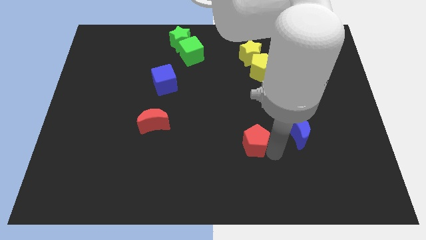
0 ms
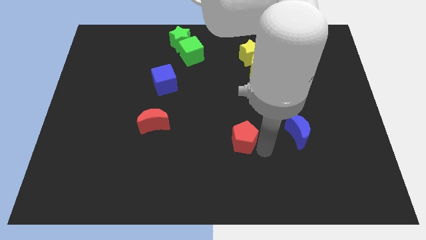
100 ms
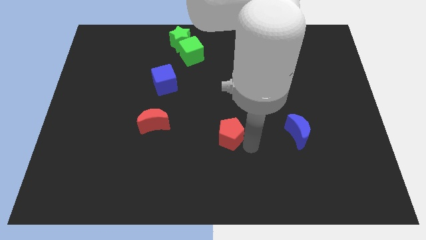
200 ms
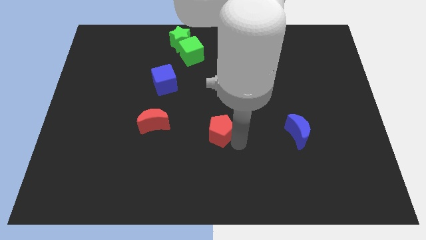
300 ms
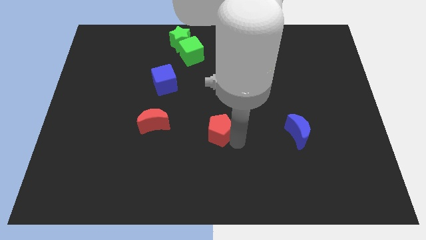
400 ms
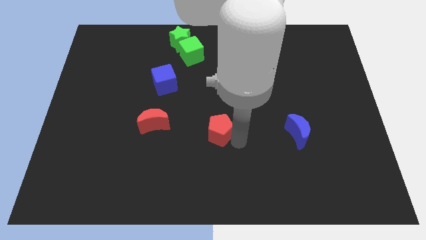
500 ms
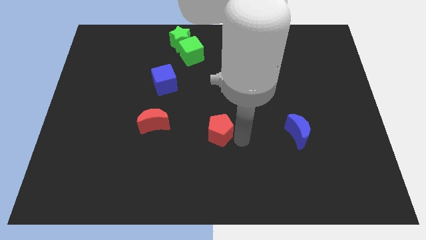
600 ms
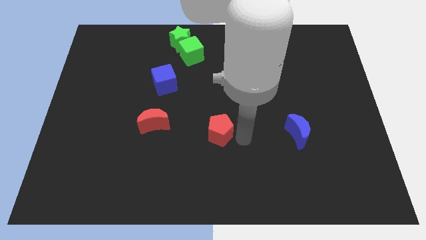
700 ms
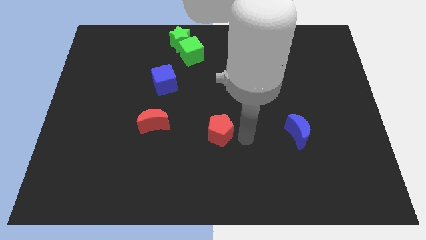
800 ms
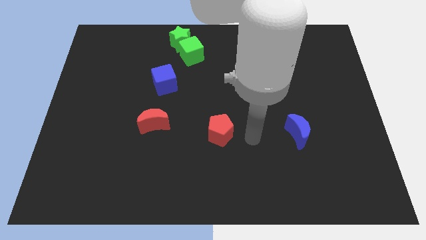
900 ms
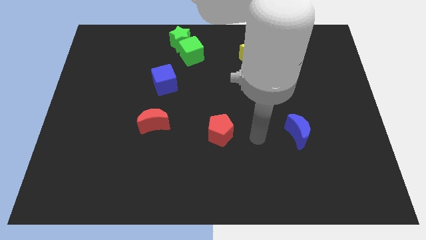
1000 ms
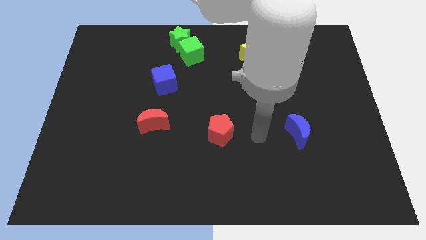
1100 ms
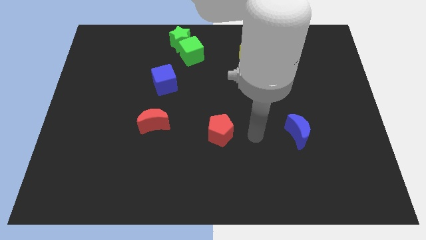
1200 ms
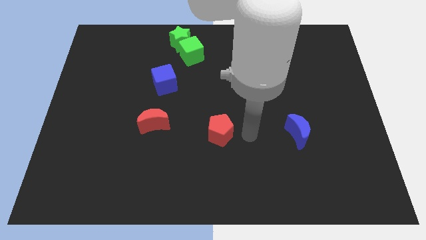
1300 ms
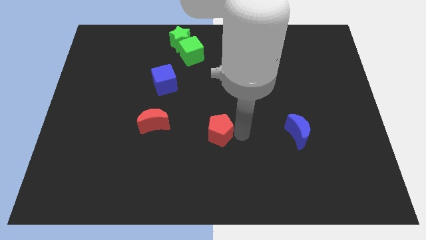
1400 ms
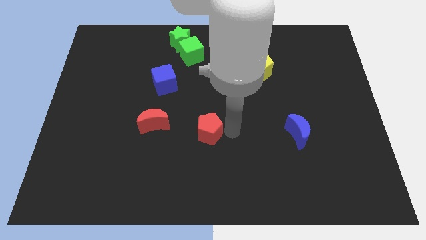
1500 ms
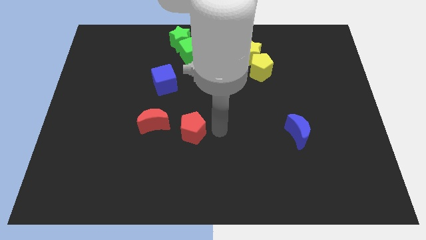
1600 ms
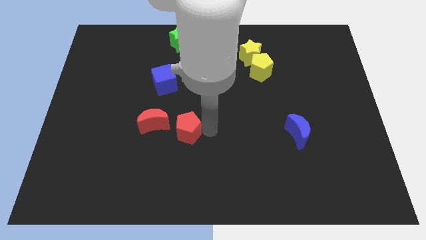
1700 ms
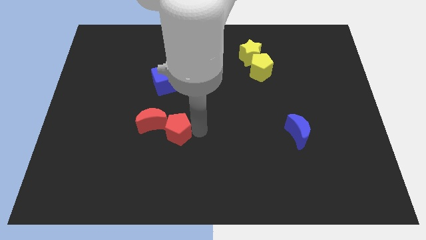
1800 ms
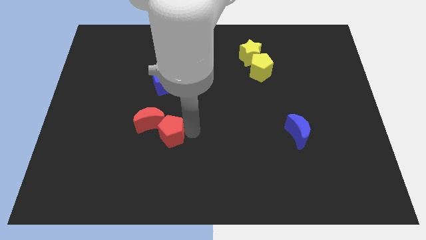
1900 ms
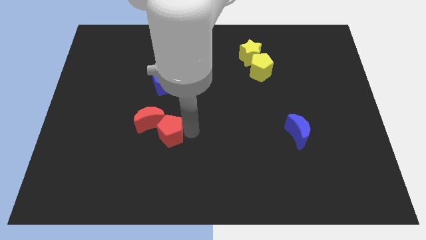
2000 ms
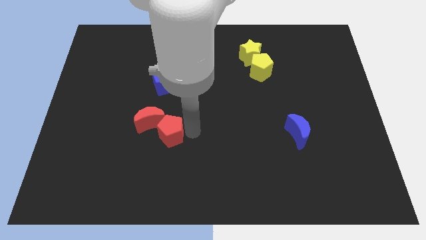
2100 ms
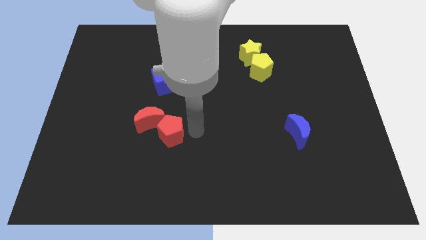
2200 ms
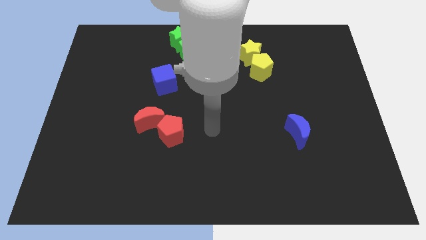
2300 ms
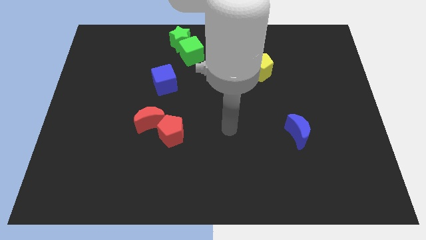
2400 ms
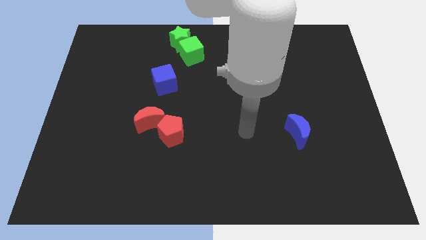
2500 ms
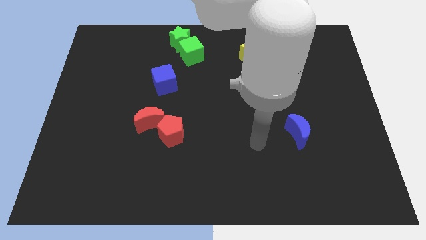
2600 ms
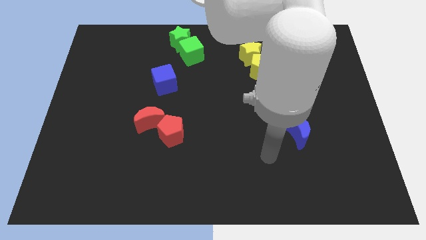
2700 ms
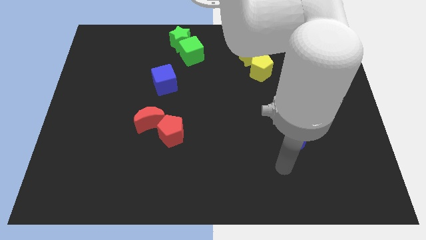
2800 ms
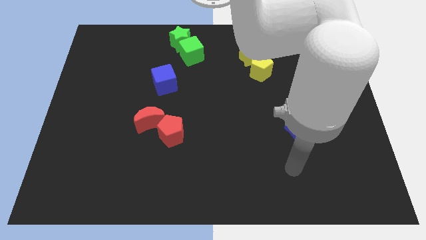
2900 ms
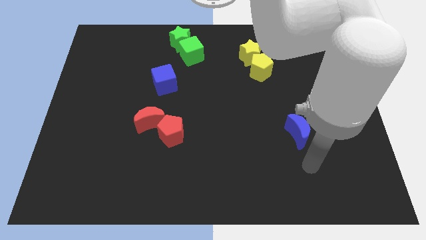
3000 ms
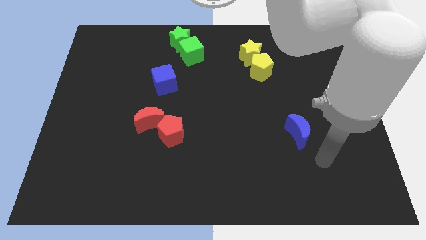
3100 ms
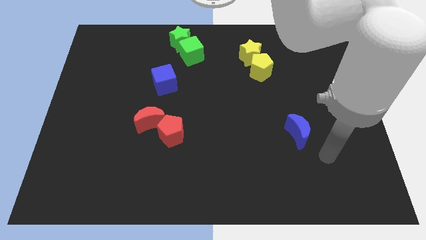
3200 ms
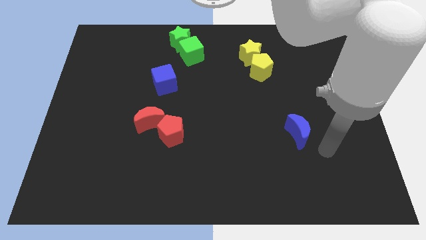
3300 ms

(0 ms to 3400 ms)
place the red pentagon at the bottom right of the red crescent

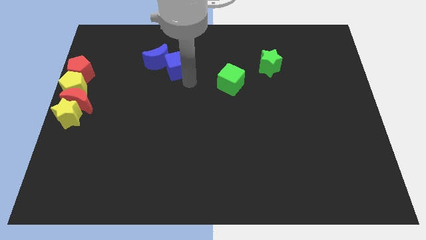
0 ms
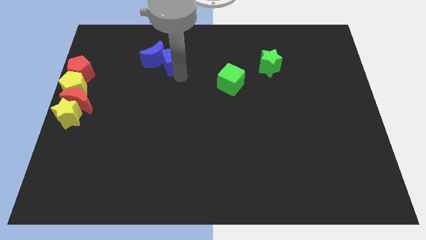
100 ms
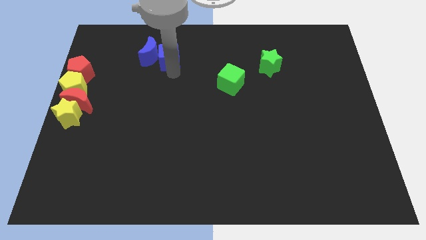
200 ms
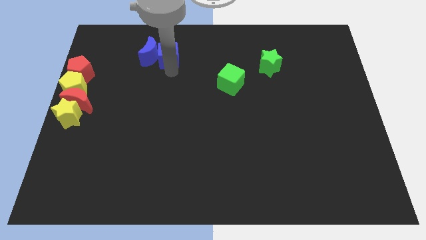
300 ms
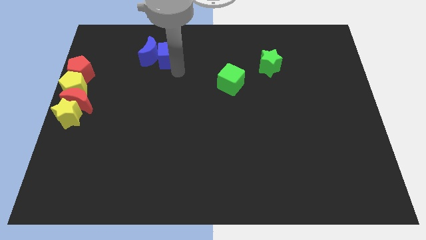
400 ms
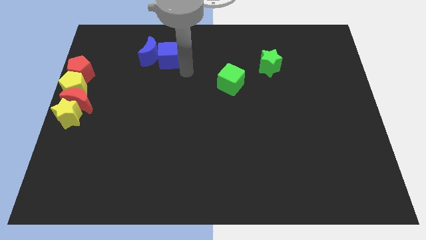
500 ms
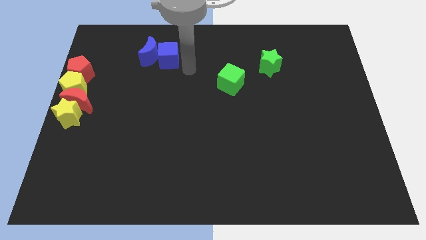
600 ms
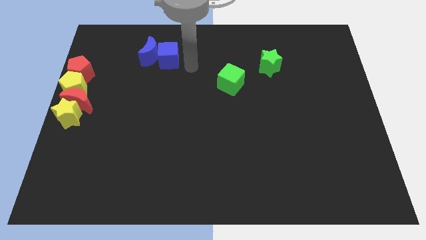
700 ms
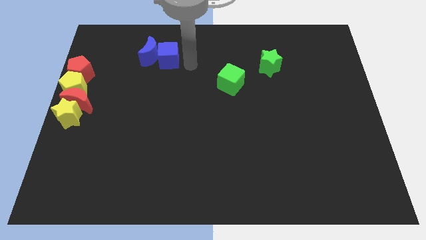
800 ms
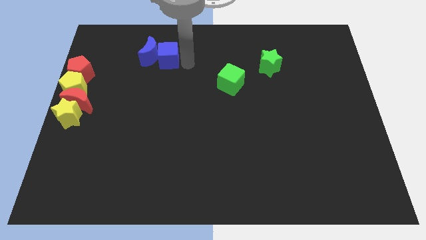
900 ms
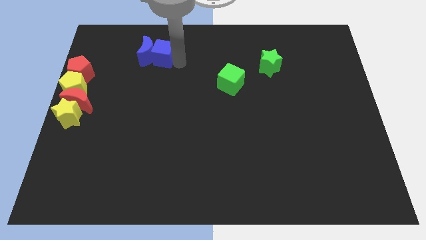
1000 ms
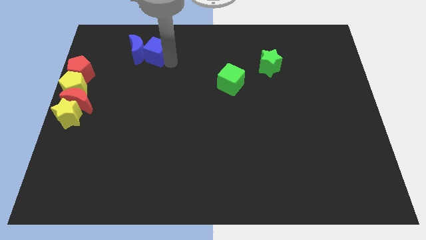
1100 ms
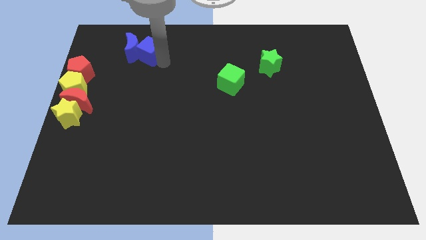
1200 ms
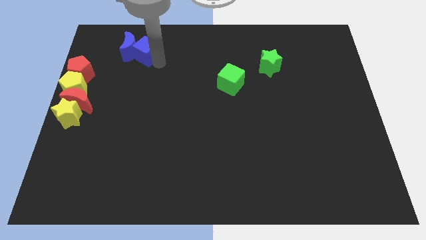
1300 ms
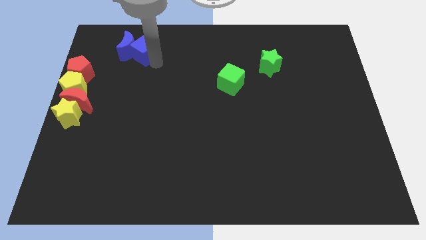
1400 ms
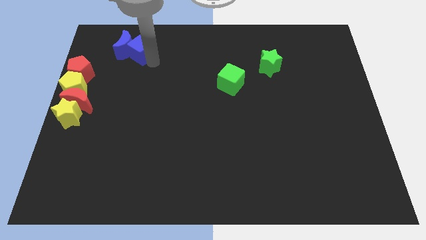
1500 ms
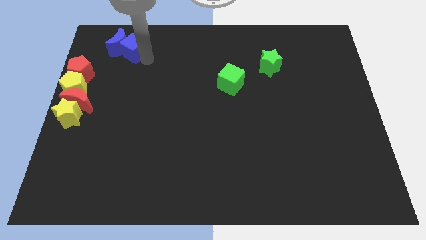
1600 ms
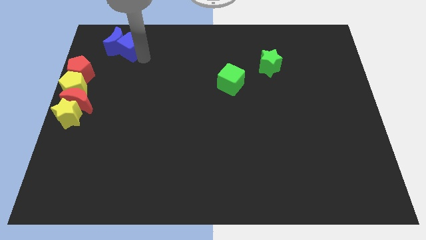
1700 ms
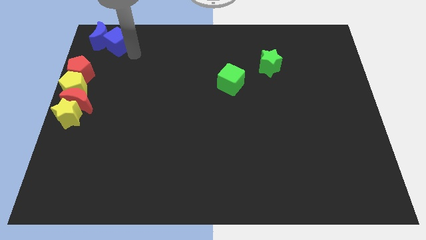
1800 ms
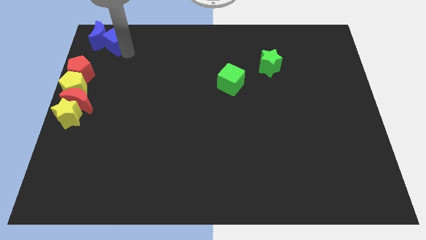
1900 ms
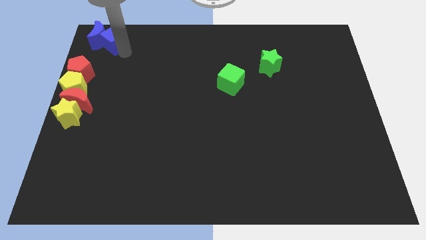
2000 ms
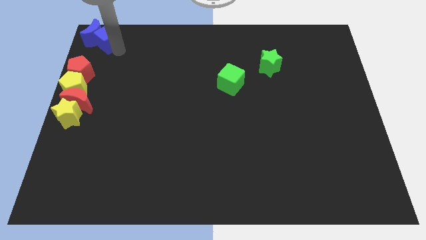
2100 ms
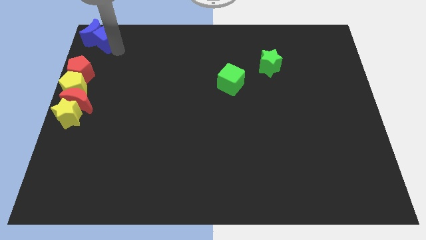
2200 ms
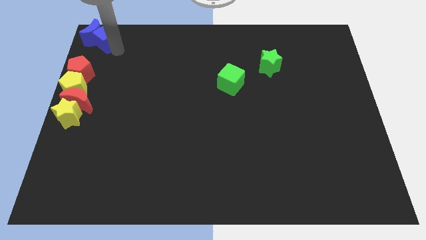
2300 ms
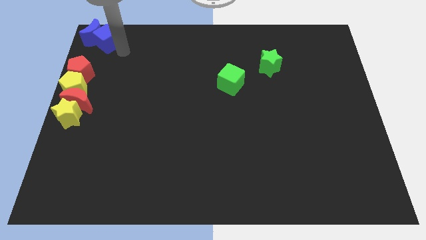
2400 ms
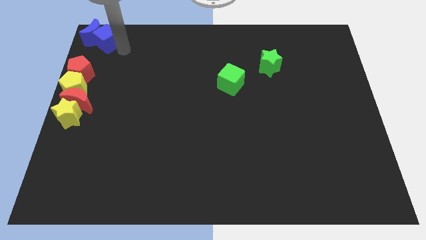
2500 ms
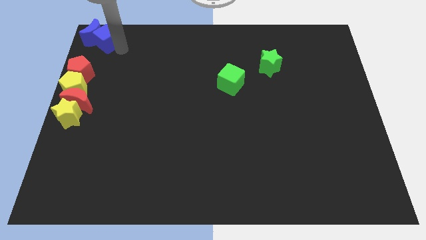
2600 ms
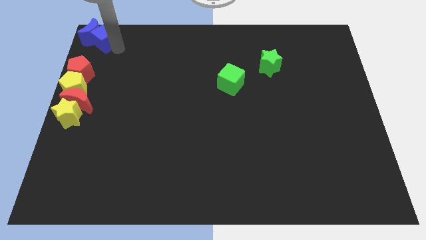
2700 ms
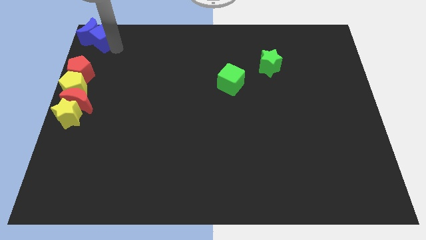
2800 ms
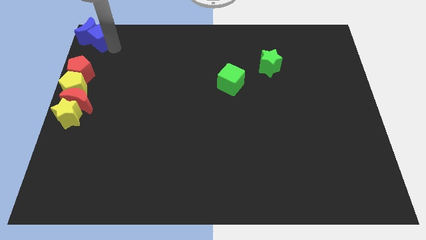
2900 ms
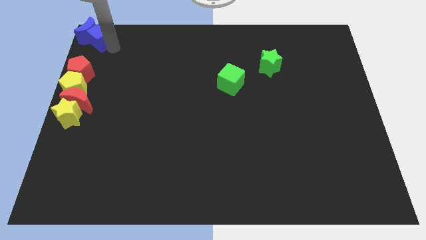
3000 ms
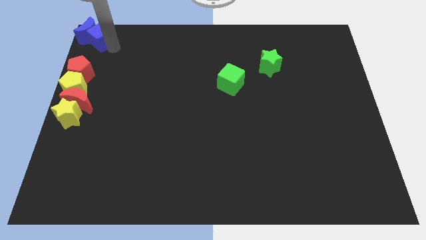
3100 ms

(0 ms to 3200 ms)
arrange the blue blocks at the top left of the board

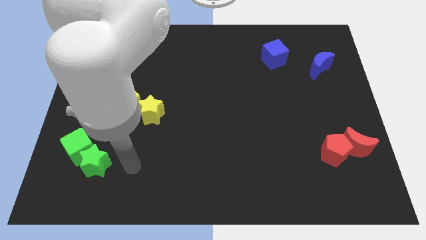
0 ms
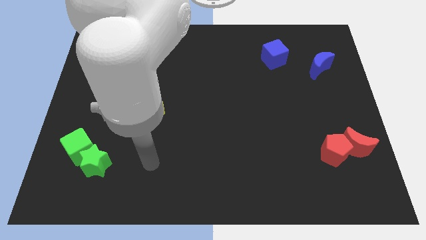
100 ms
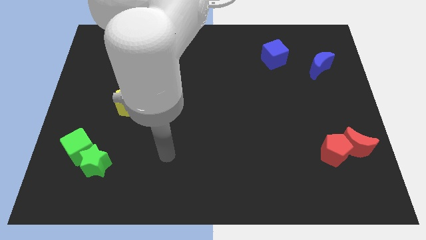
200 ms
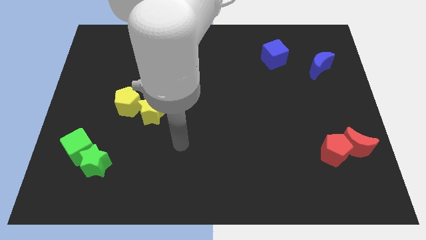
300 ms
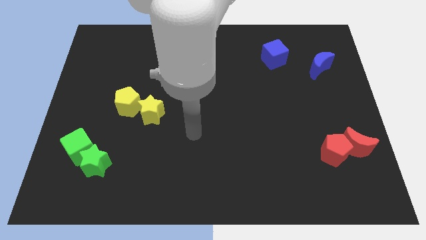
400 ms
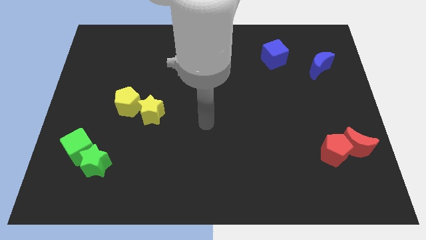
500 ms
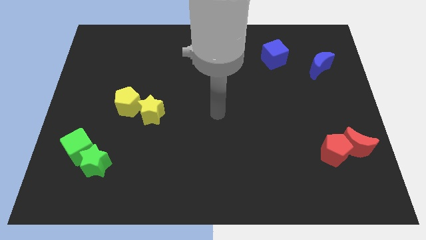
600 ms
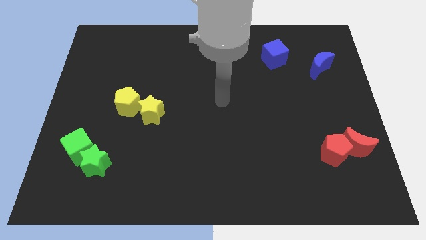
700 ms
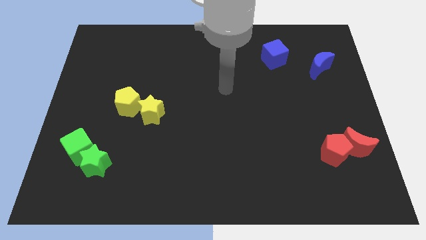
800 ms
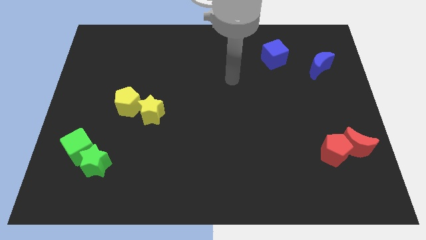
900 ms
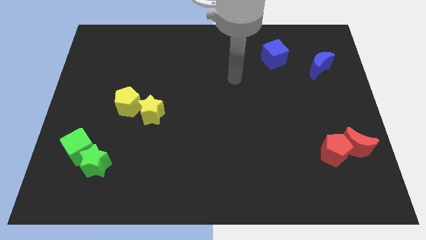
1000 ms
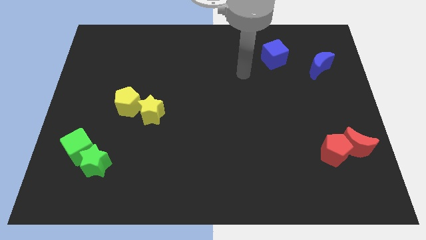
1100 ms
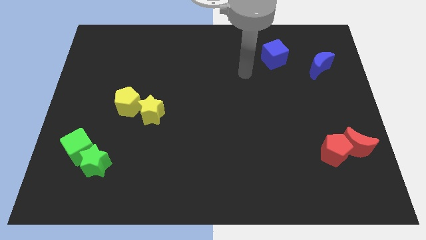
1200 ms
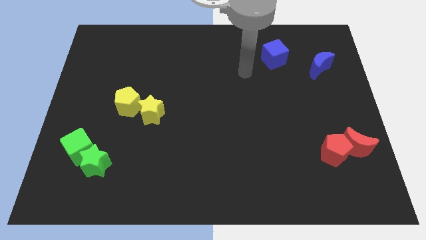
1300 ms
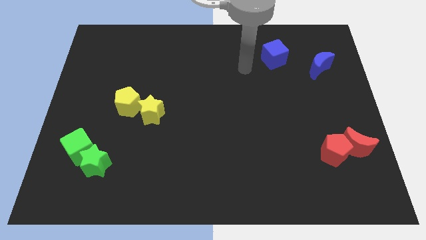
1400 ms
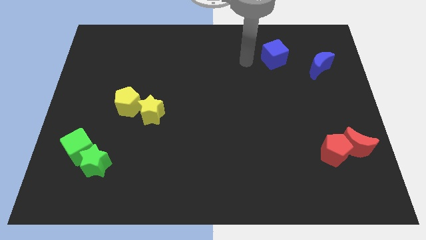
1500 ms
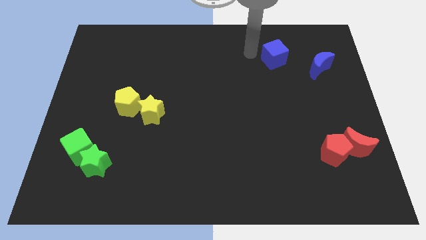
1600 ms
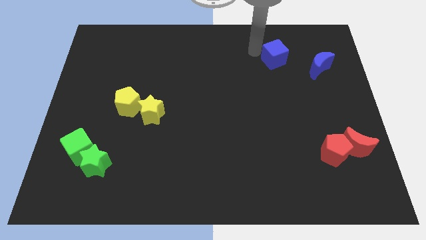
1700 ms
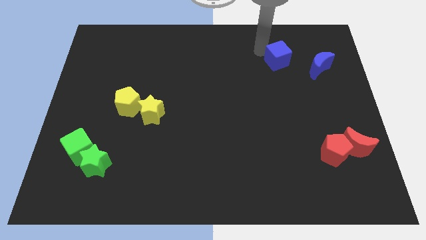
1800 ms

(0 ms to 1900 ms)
place your hand close to blue cube

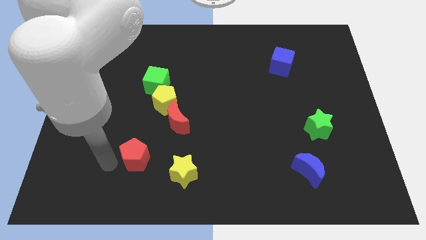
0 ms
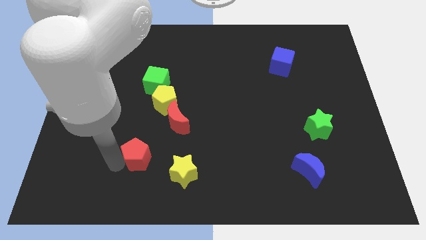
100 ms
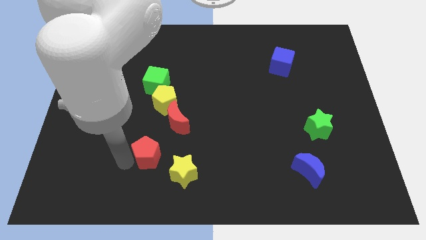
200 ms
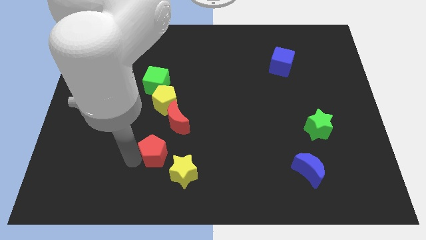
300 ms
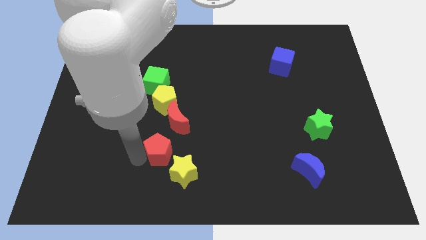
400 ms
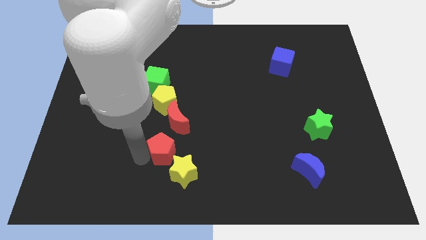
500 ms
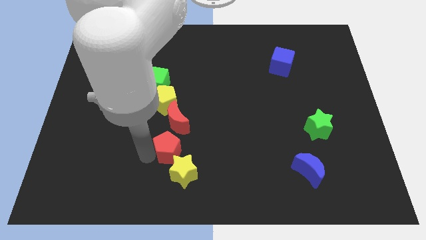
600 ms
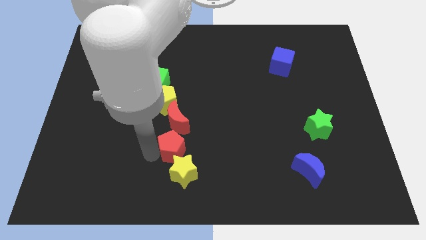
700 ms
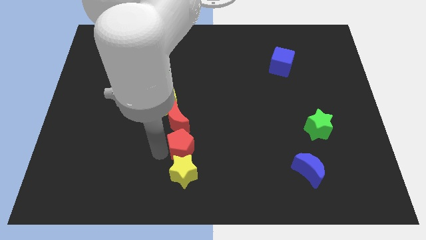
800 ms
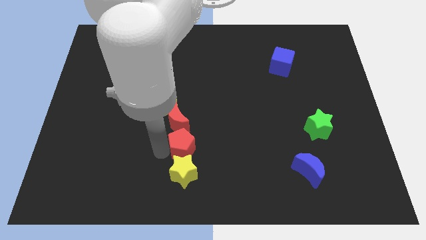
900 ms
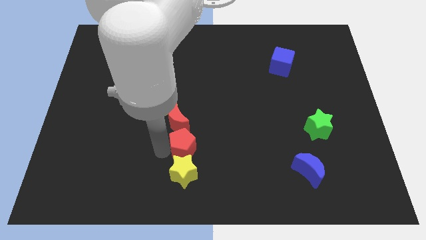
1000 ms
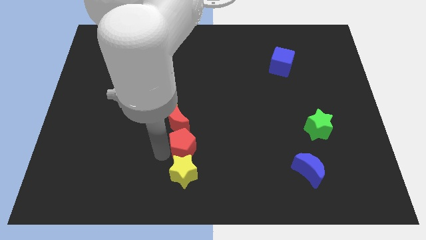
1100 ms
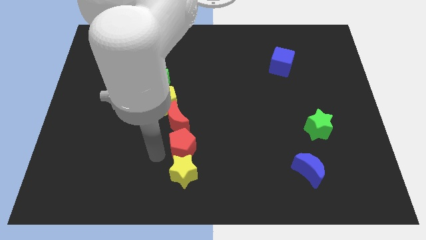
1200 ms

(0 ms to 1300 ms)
place the red pentagon above the yellow star
